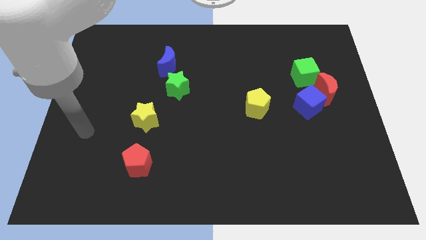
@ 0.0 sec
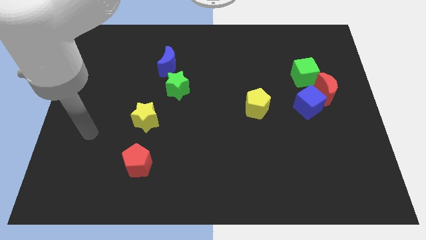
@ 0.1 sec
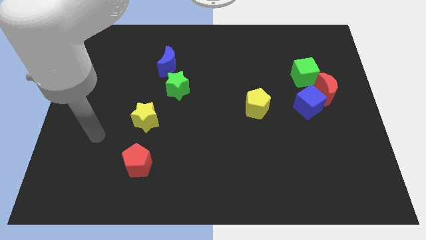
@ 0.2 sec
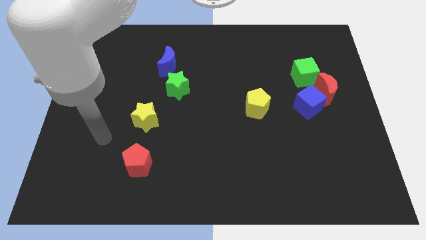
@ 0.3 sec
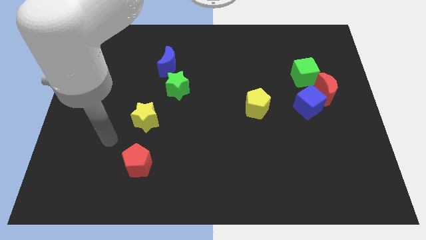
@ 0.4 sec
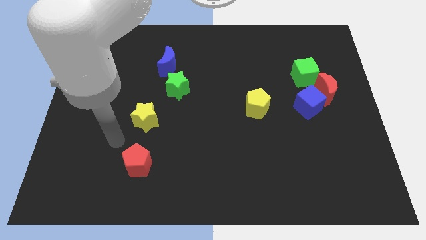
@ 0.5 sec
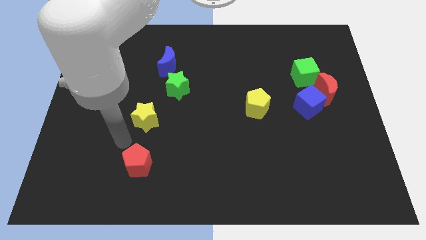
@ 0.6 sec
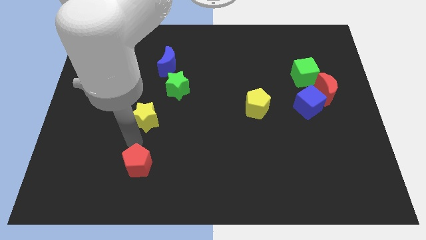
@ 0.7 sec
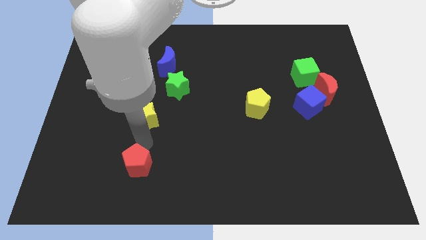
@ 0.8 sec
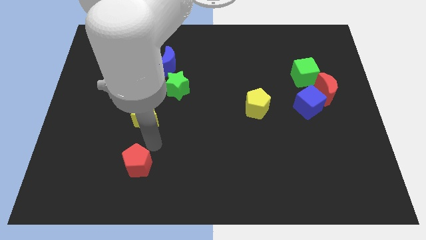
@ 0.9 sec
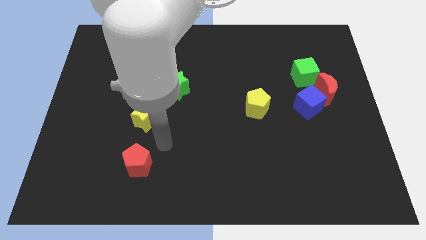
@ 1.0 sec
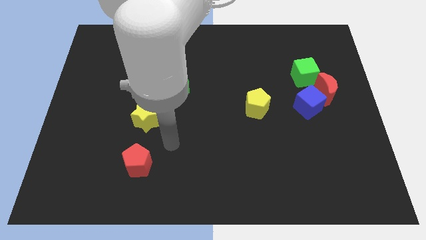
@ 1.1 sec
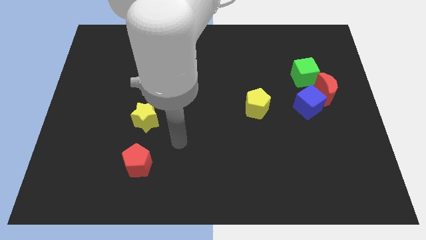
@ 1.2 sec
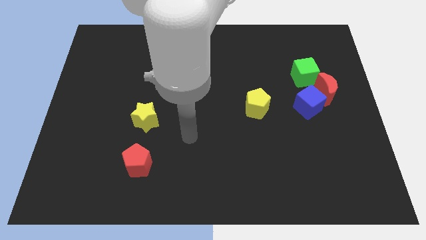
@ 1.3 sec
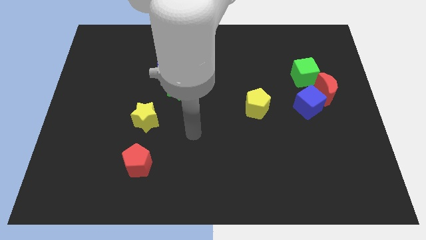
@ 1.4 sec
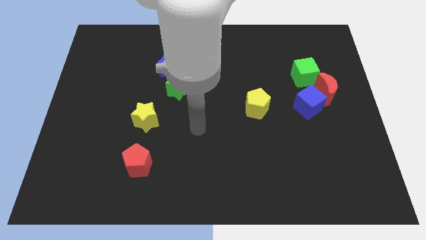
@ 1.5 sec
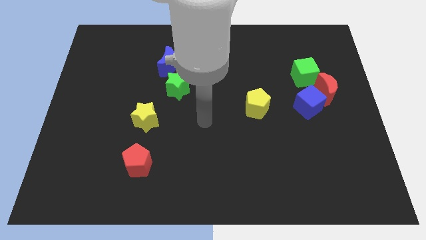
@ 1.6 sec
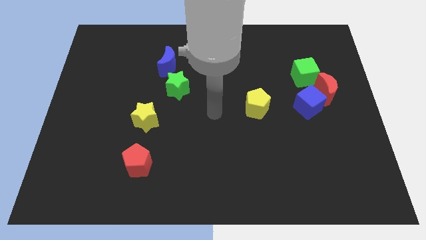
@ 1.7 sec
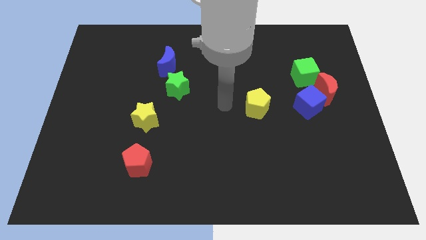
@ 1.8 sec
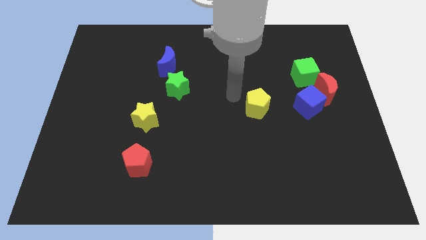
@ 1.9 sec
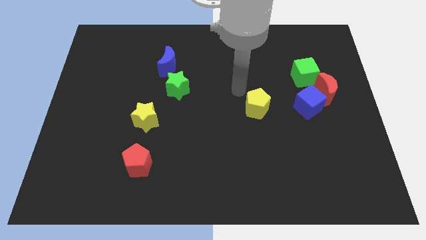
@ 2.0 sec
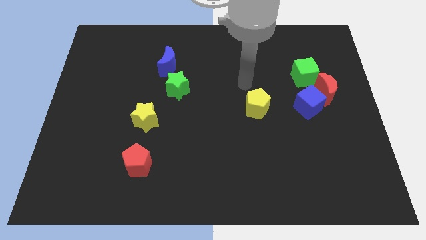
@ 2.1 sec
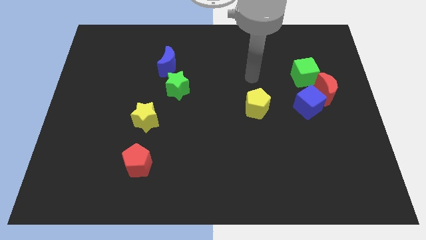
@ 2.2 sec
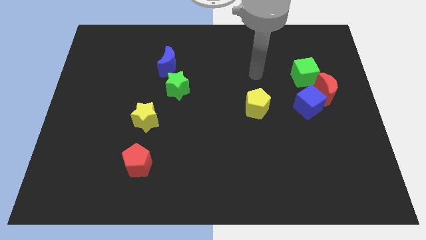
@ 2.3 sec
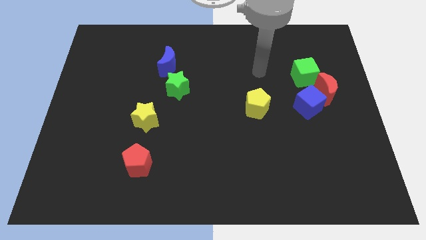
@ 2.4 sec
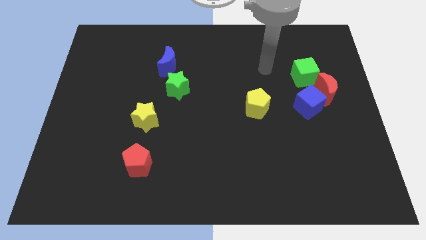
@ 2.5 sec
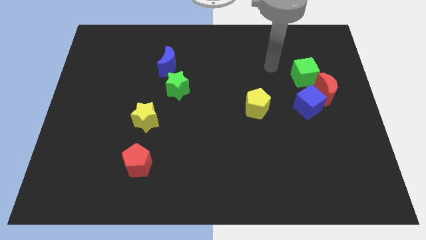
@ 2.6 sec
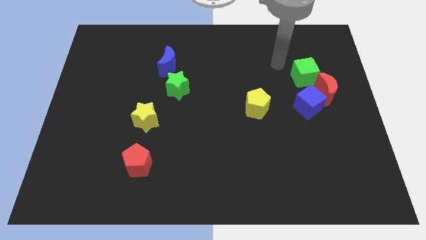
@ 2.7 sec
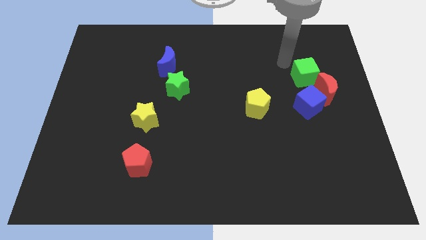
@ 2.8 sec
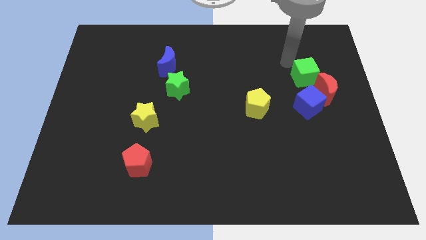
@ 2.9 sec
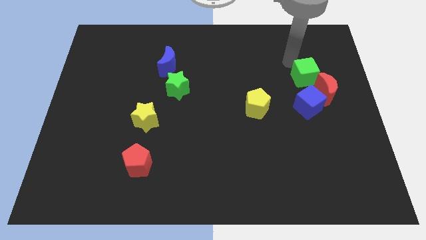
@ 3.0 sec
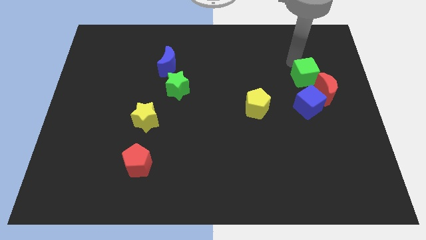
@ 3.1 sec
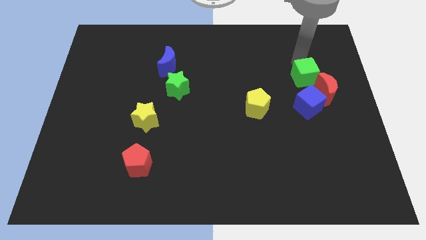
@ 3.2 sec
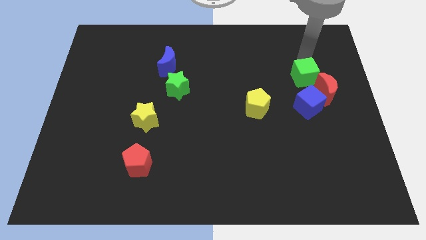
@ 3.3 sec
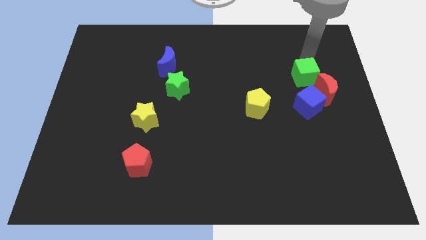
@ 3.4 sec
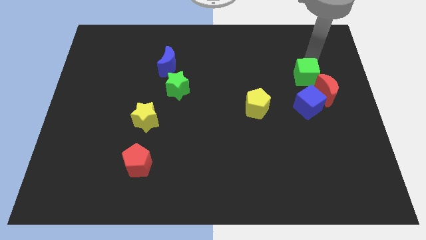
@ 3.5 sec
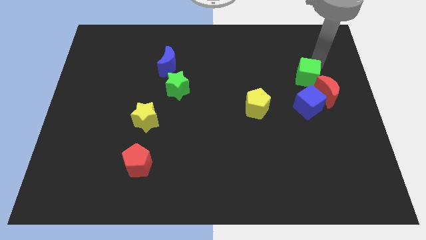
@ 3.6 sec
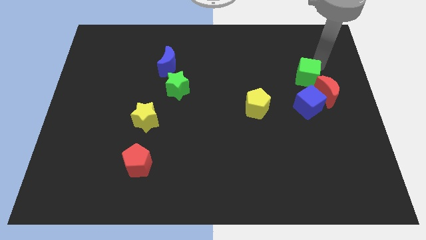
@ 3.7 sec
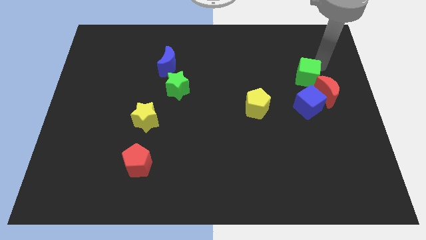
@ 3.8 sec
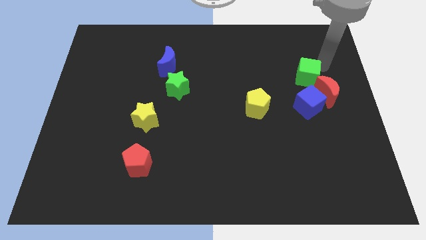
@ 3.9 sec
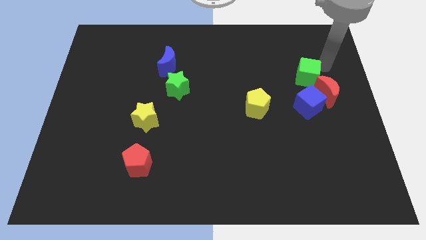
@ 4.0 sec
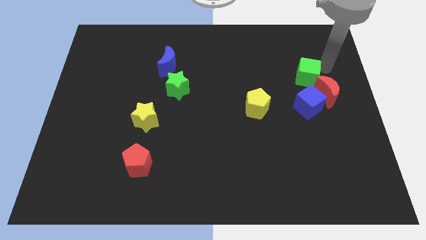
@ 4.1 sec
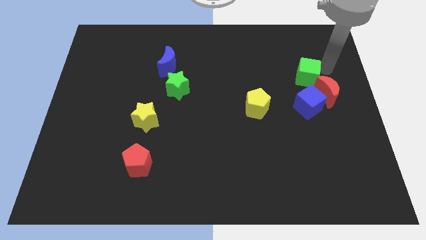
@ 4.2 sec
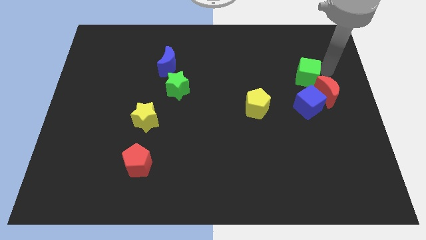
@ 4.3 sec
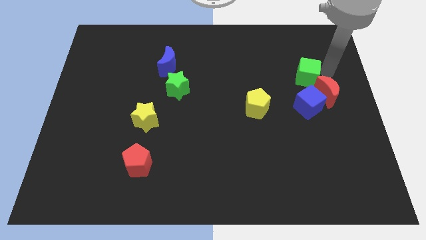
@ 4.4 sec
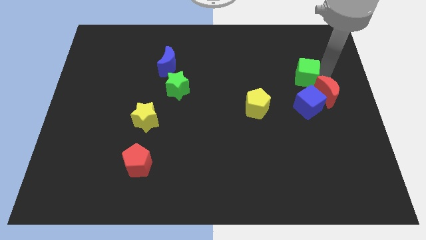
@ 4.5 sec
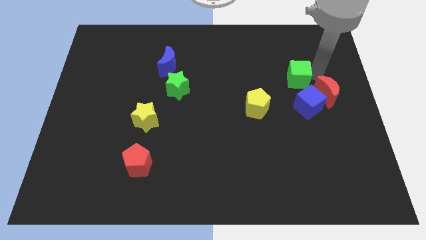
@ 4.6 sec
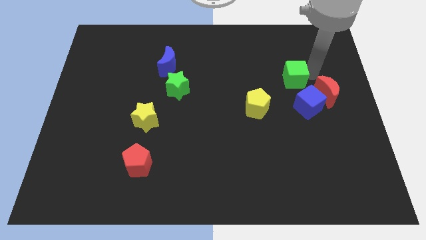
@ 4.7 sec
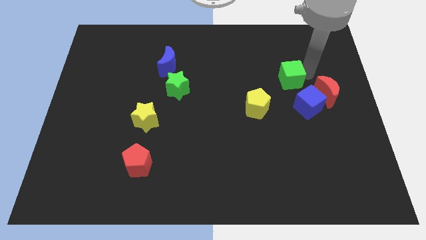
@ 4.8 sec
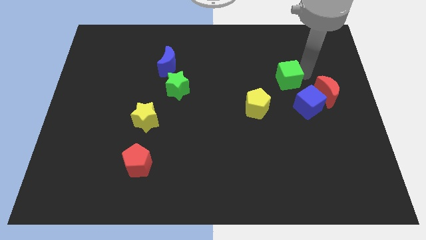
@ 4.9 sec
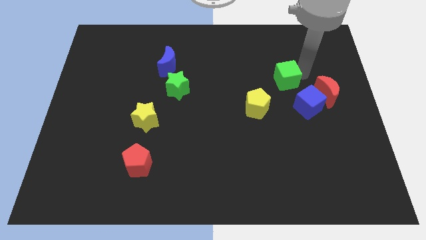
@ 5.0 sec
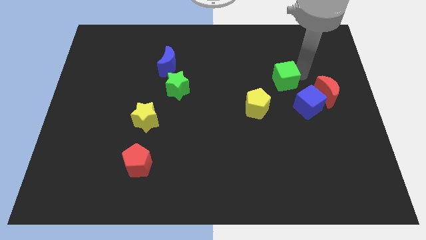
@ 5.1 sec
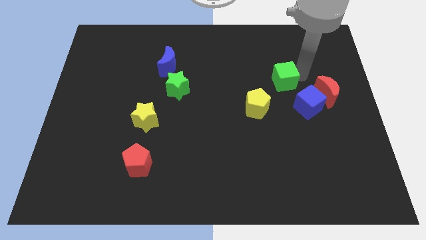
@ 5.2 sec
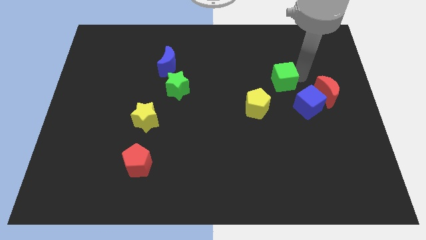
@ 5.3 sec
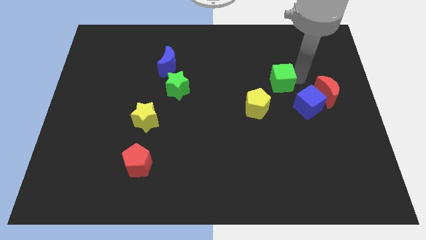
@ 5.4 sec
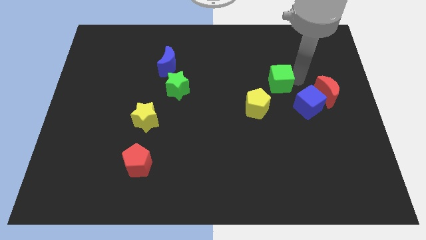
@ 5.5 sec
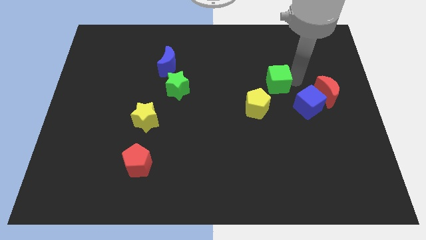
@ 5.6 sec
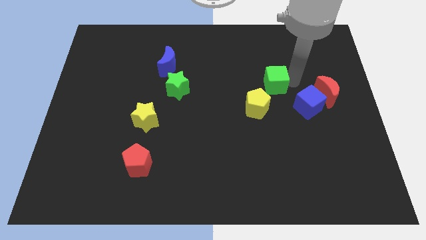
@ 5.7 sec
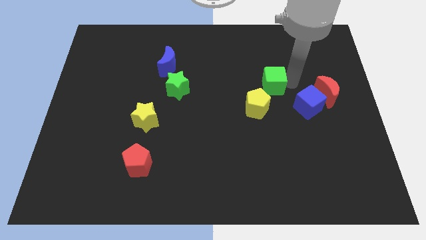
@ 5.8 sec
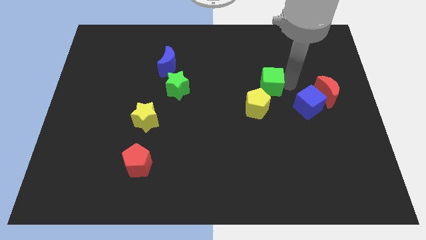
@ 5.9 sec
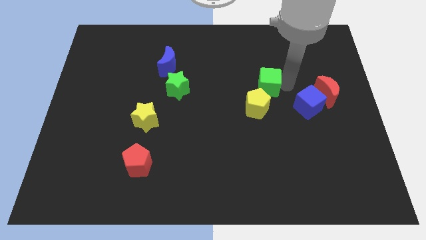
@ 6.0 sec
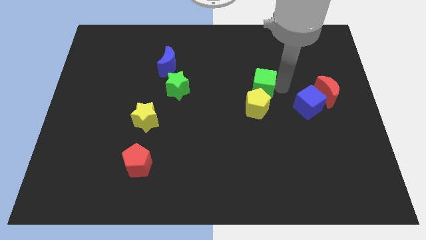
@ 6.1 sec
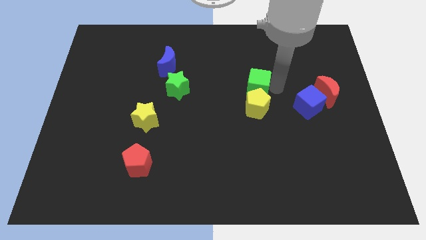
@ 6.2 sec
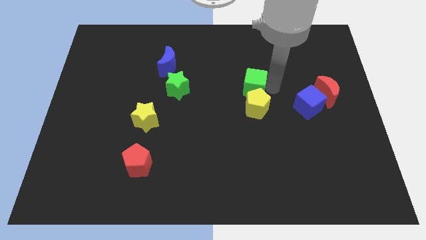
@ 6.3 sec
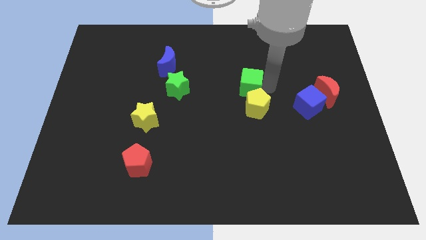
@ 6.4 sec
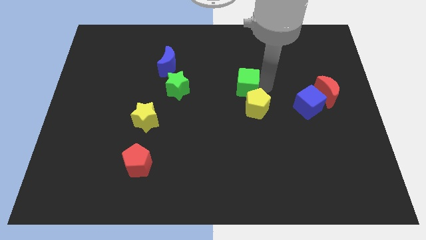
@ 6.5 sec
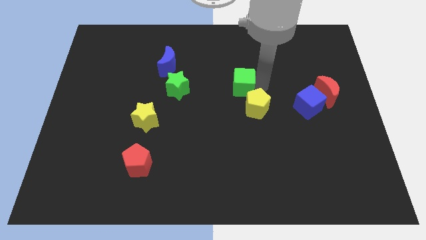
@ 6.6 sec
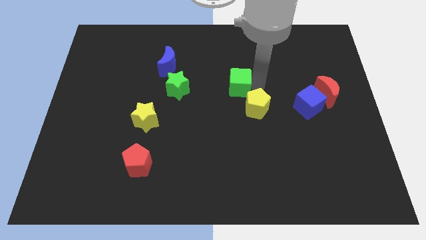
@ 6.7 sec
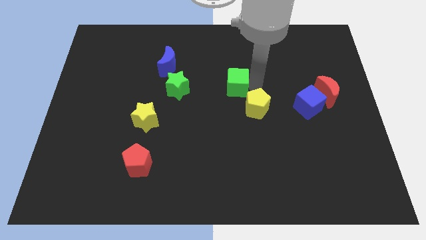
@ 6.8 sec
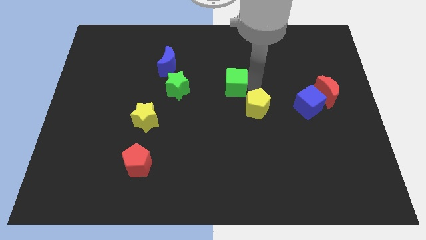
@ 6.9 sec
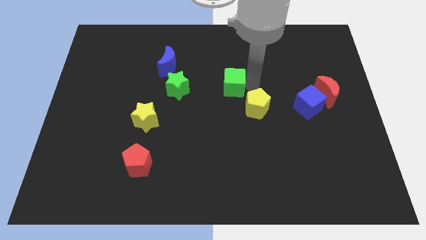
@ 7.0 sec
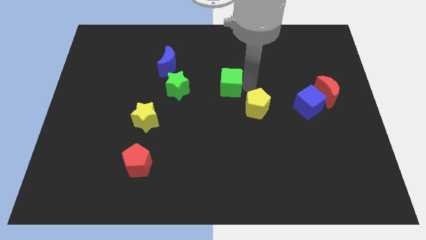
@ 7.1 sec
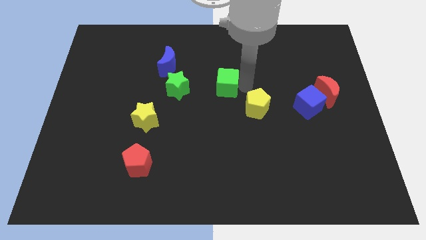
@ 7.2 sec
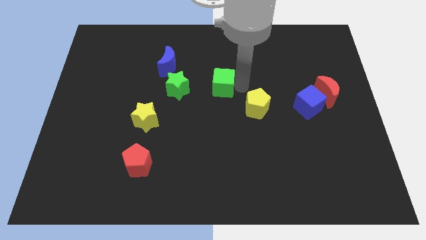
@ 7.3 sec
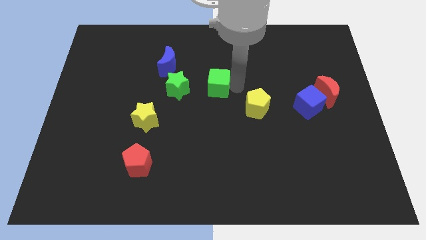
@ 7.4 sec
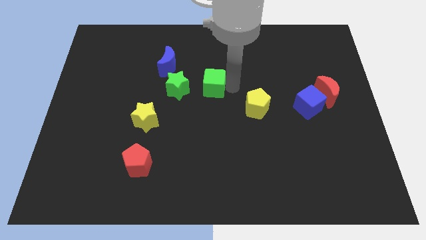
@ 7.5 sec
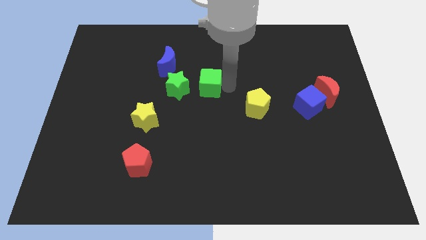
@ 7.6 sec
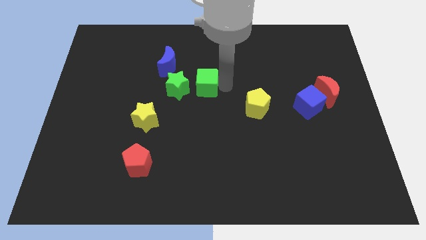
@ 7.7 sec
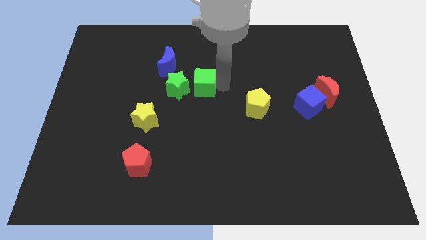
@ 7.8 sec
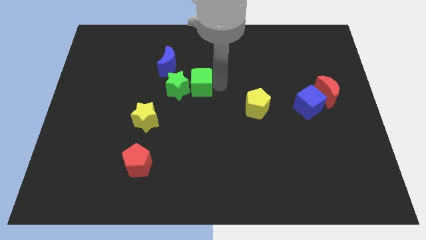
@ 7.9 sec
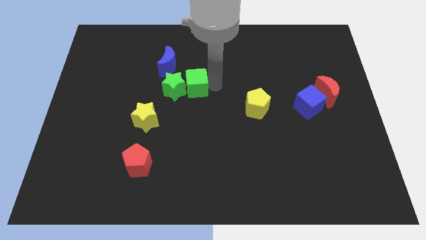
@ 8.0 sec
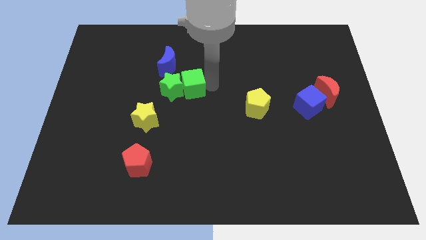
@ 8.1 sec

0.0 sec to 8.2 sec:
slide the green cube to the green star
